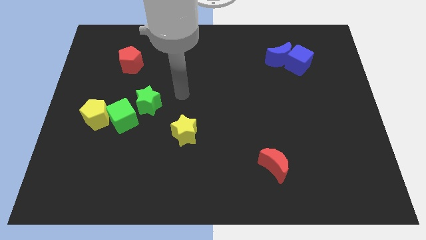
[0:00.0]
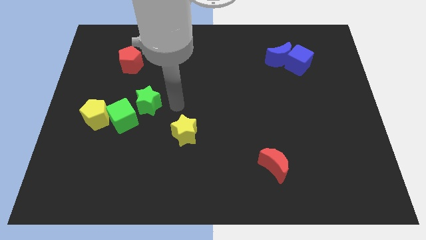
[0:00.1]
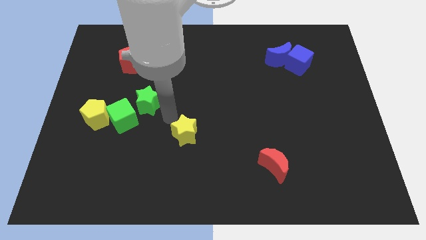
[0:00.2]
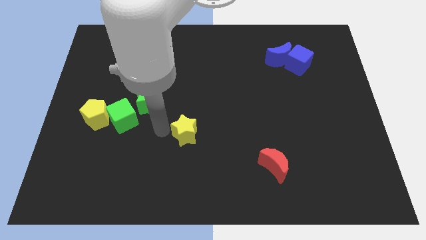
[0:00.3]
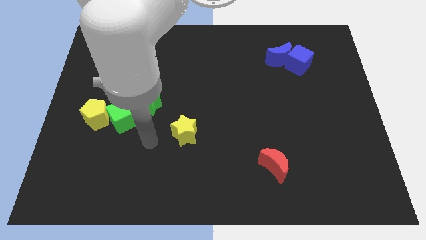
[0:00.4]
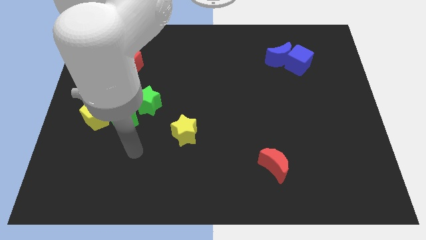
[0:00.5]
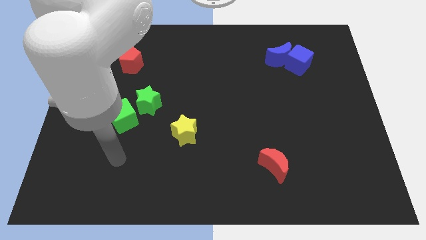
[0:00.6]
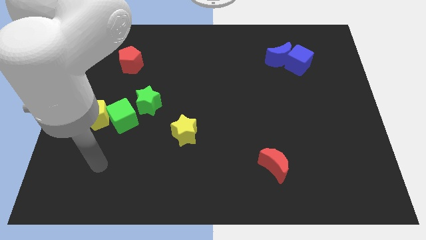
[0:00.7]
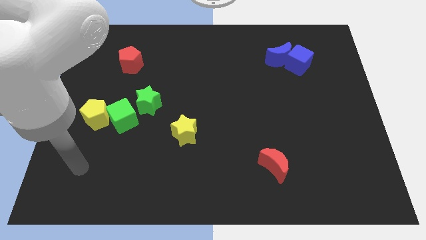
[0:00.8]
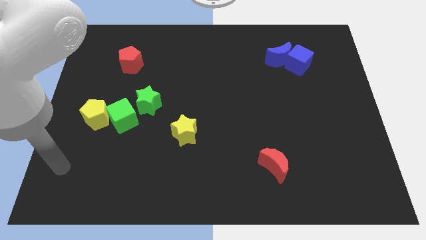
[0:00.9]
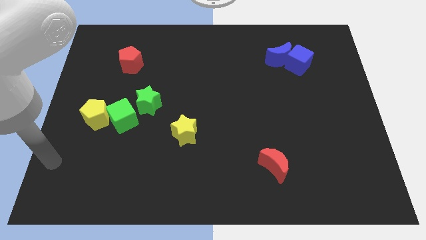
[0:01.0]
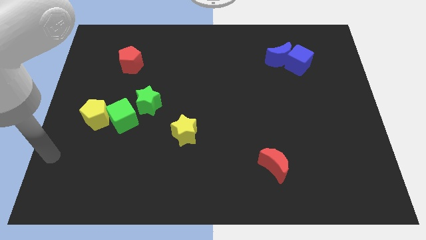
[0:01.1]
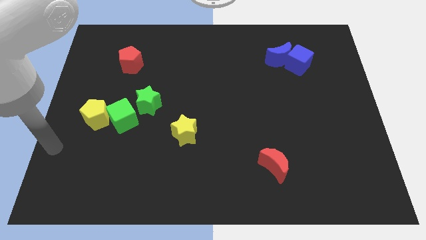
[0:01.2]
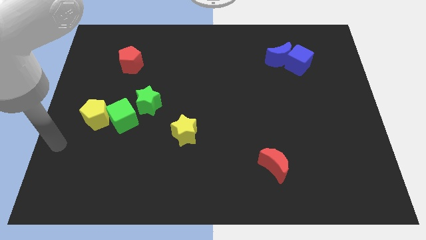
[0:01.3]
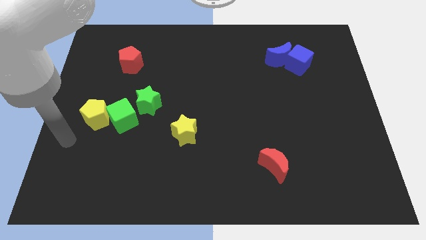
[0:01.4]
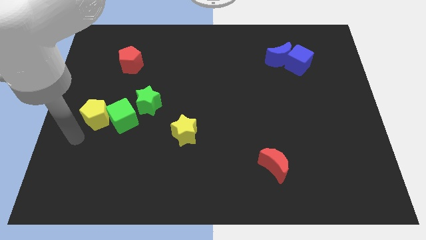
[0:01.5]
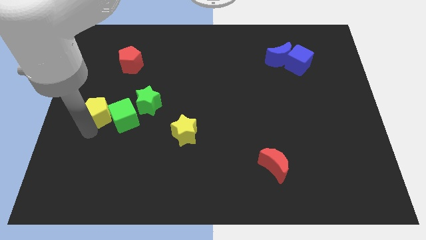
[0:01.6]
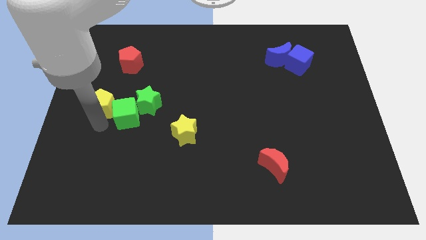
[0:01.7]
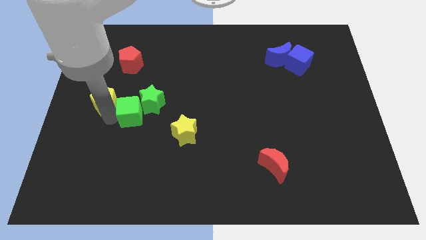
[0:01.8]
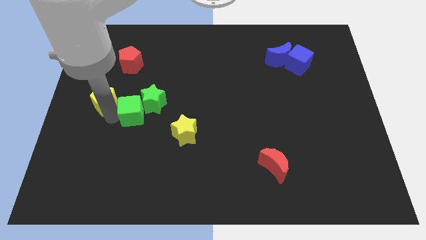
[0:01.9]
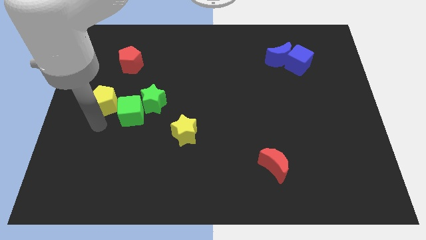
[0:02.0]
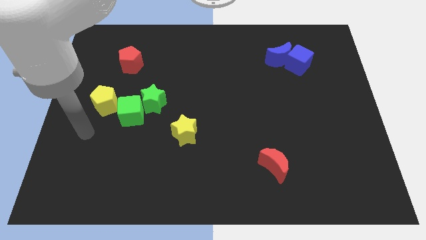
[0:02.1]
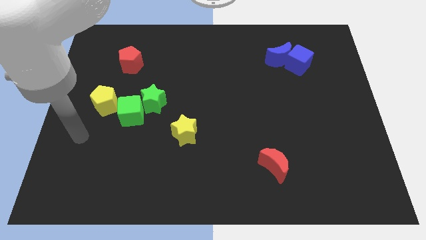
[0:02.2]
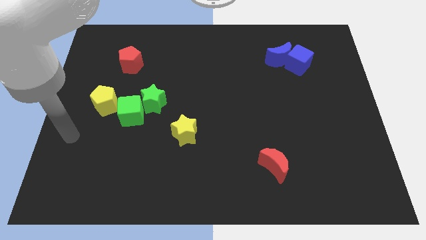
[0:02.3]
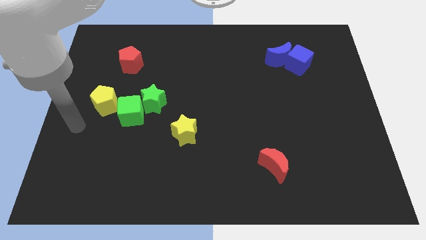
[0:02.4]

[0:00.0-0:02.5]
push yellow pentagon and green block

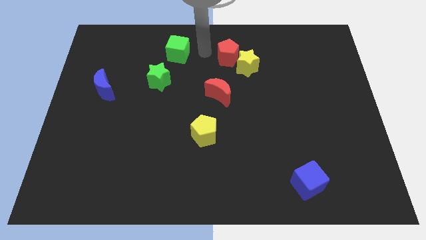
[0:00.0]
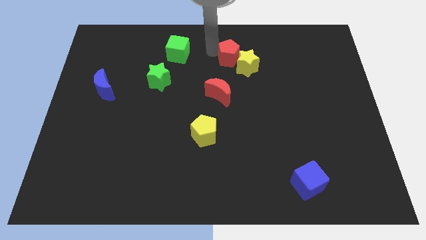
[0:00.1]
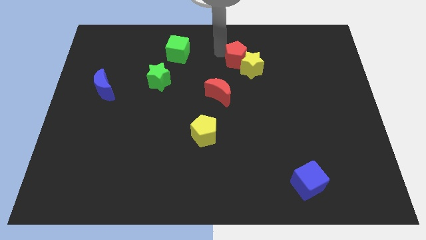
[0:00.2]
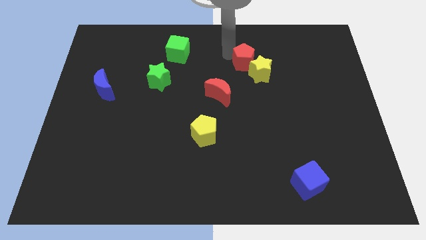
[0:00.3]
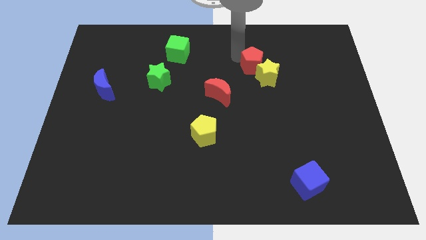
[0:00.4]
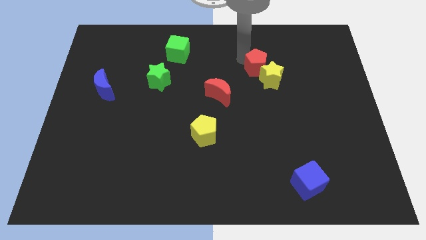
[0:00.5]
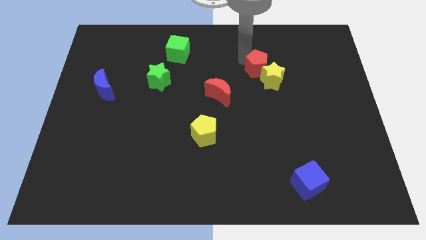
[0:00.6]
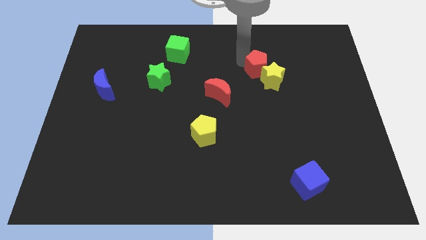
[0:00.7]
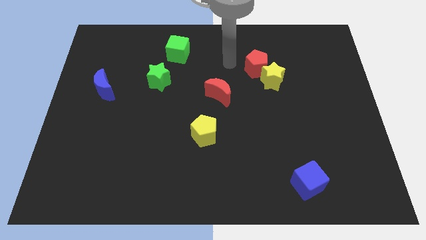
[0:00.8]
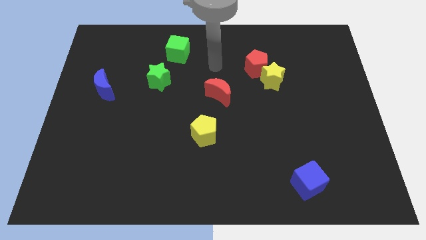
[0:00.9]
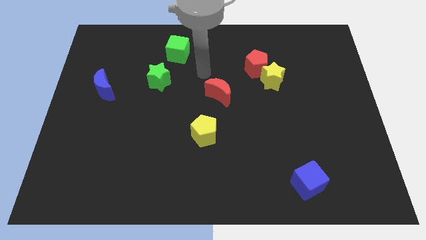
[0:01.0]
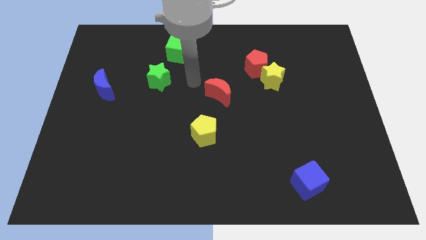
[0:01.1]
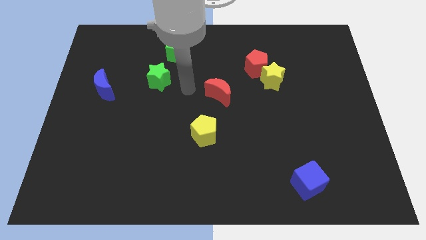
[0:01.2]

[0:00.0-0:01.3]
slide the red pentagon into the yellow star

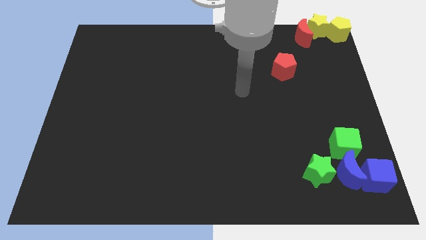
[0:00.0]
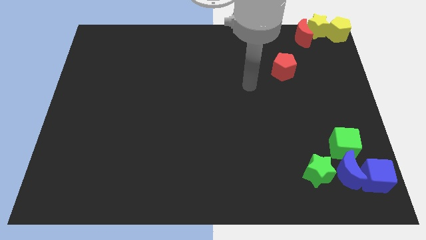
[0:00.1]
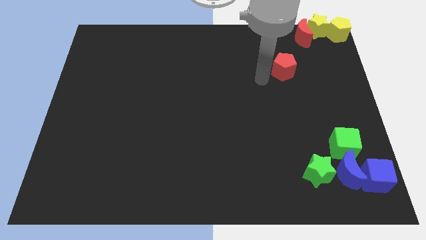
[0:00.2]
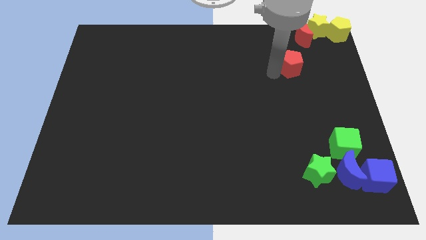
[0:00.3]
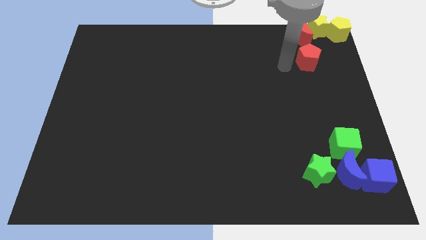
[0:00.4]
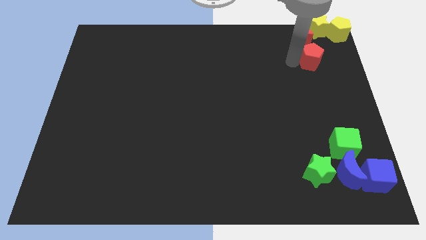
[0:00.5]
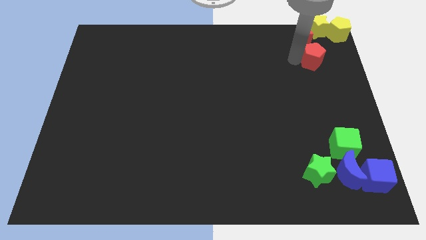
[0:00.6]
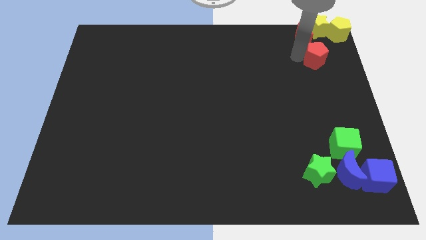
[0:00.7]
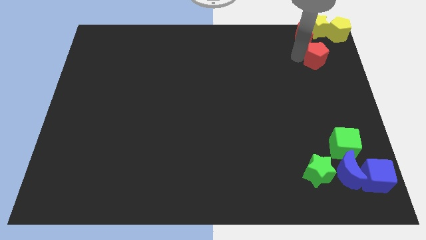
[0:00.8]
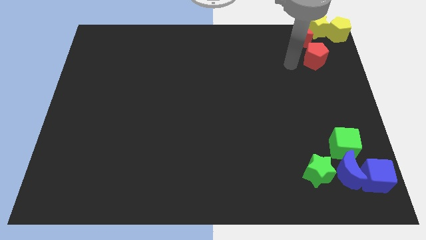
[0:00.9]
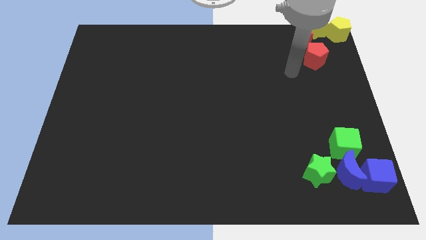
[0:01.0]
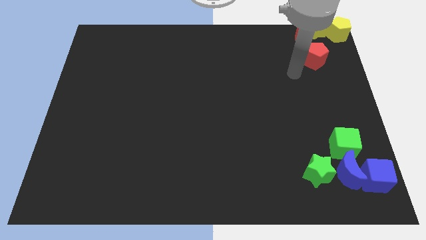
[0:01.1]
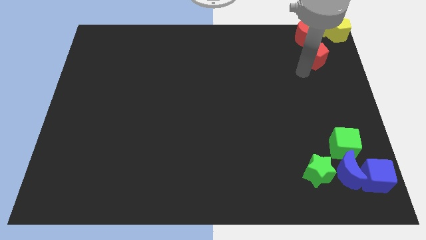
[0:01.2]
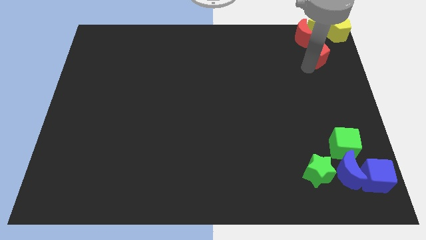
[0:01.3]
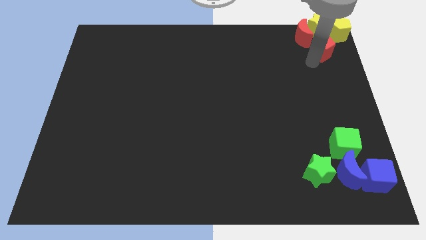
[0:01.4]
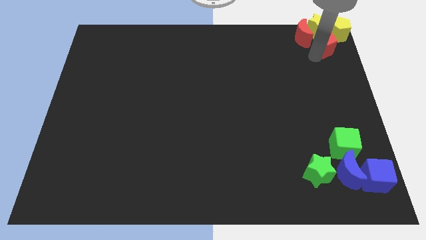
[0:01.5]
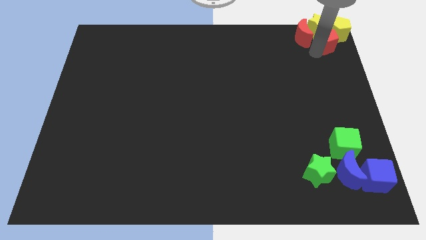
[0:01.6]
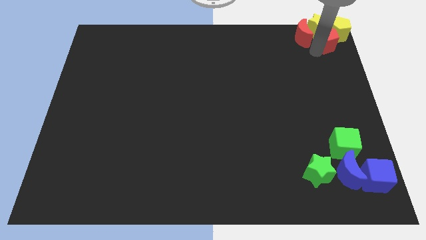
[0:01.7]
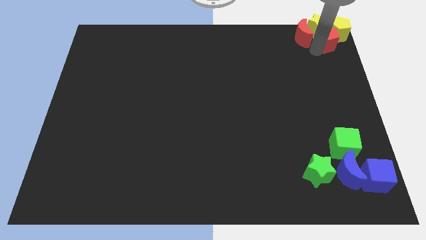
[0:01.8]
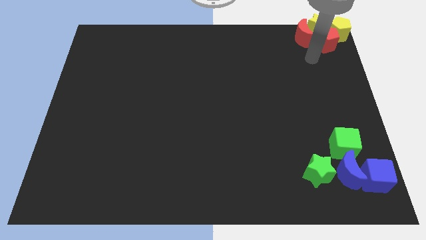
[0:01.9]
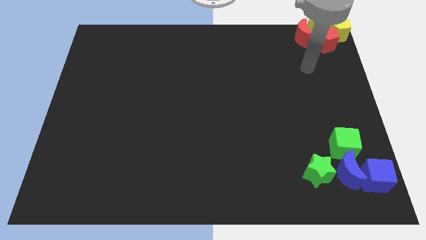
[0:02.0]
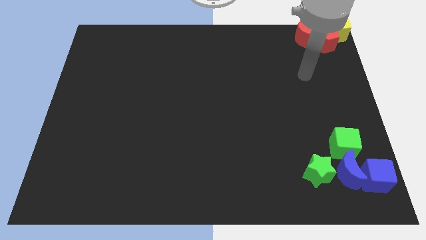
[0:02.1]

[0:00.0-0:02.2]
move the red pentagon below the yellow star

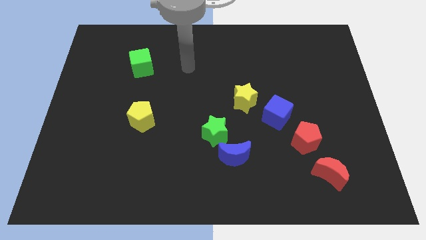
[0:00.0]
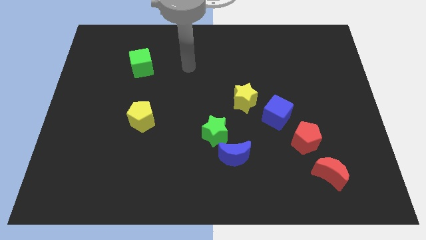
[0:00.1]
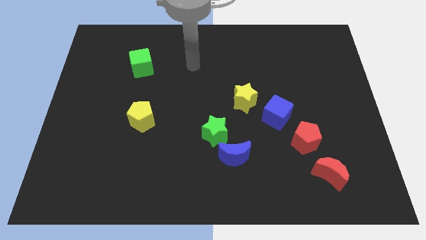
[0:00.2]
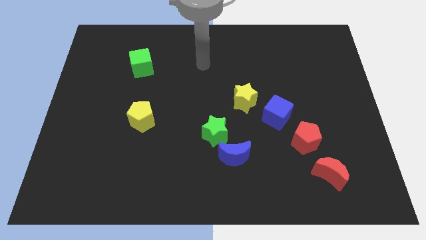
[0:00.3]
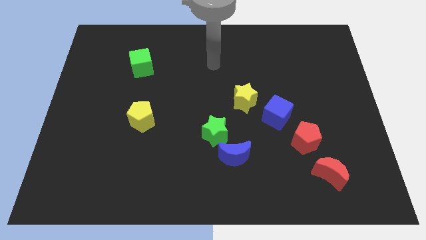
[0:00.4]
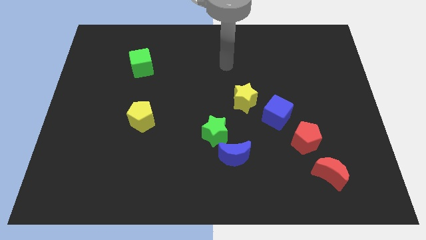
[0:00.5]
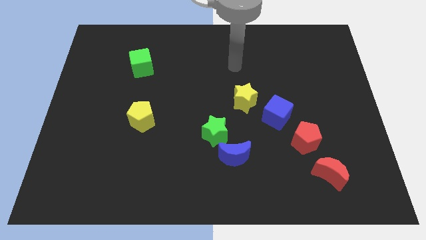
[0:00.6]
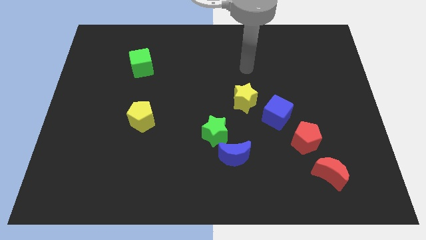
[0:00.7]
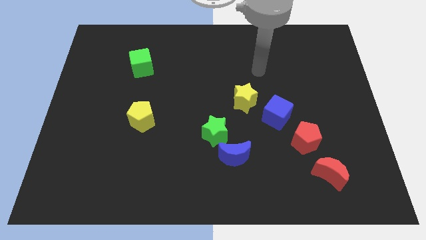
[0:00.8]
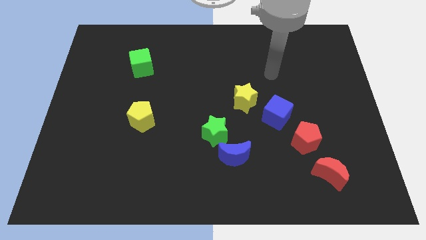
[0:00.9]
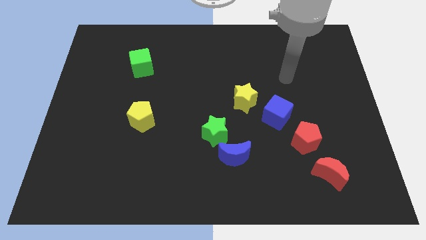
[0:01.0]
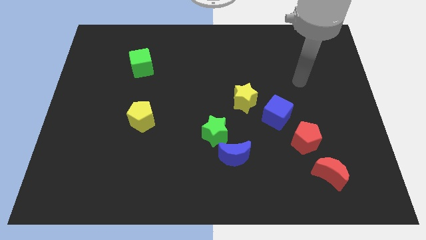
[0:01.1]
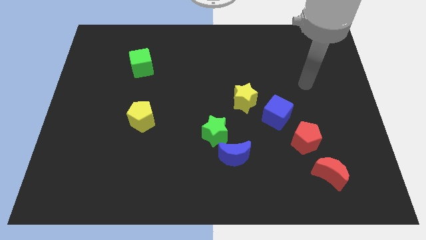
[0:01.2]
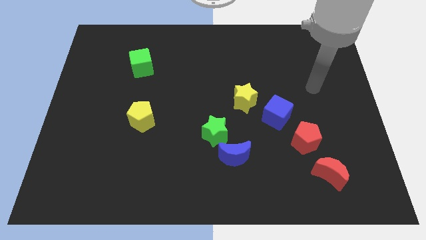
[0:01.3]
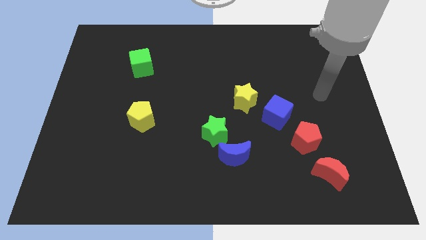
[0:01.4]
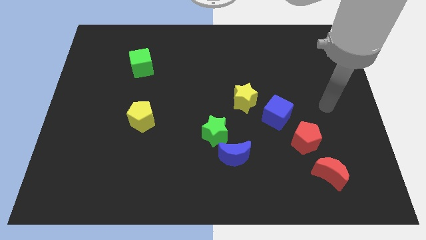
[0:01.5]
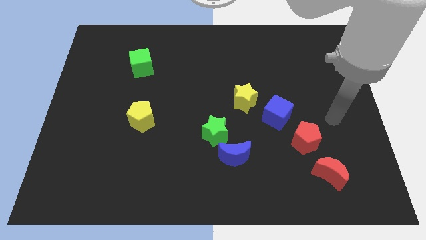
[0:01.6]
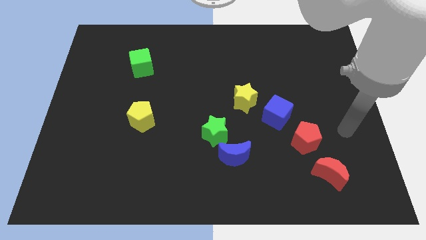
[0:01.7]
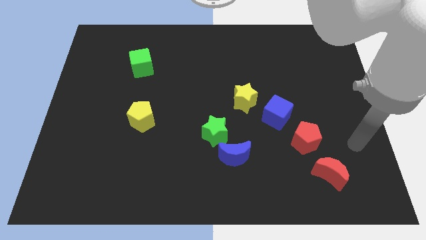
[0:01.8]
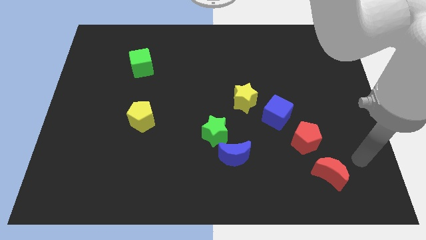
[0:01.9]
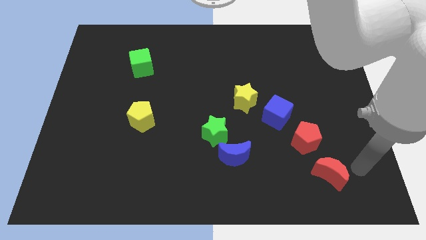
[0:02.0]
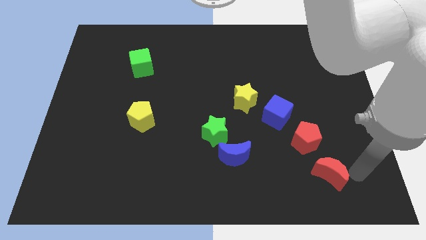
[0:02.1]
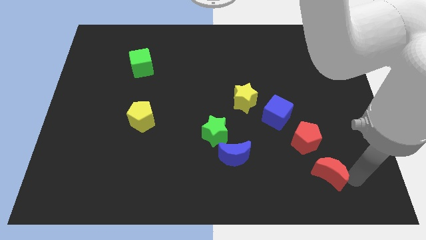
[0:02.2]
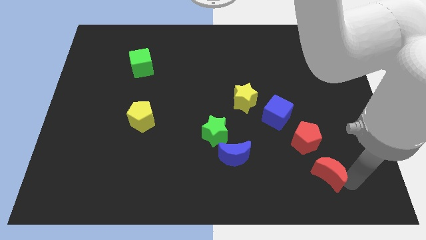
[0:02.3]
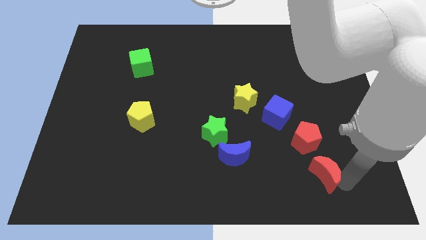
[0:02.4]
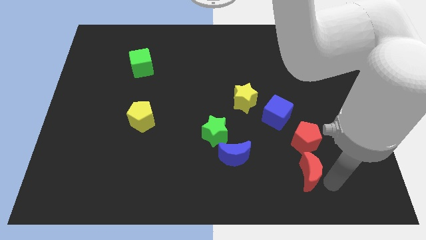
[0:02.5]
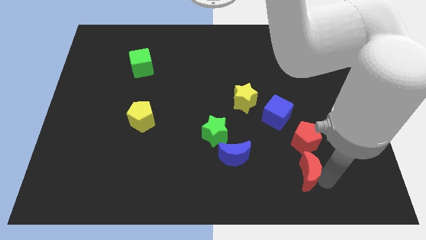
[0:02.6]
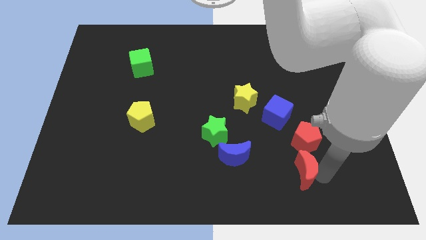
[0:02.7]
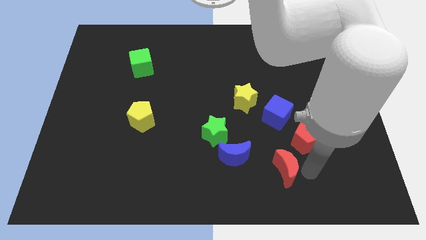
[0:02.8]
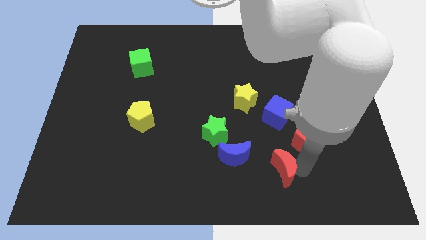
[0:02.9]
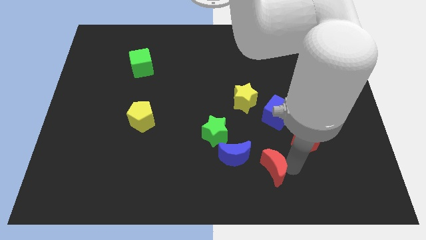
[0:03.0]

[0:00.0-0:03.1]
move red crescent towards the blue moon
